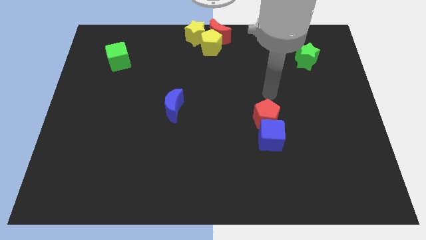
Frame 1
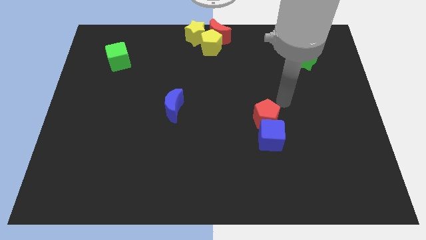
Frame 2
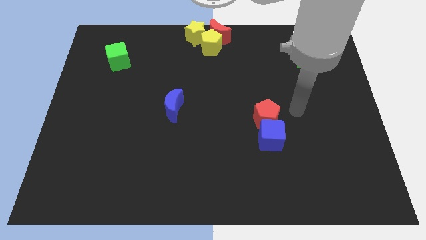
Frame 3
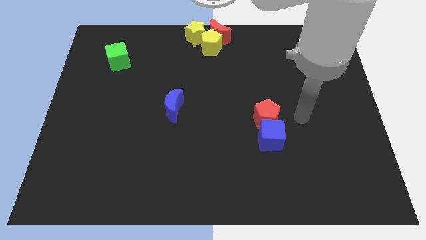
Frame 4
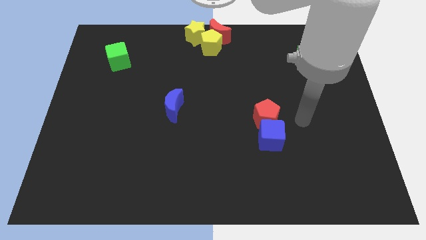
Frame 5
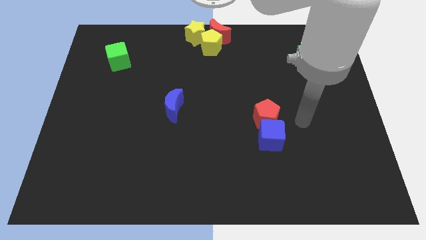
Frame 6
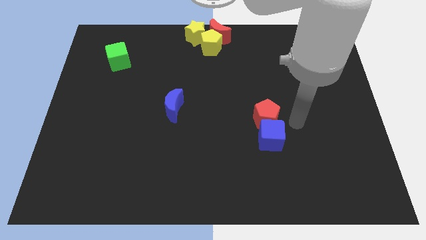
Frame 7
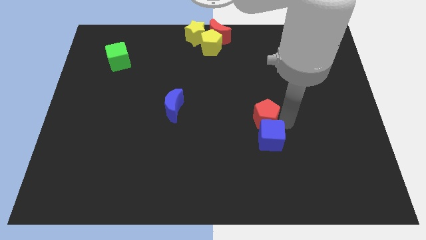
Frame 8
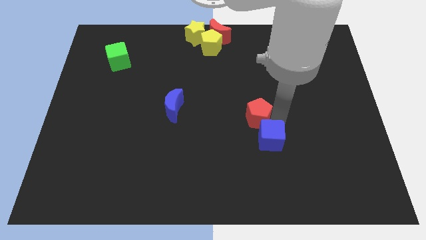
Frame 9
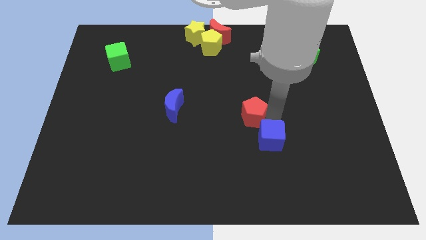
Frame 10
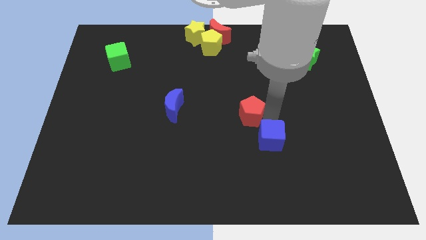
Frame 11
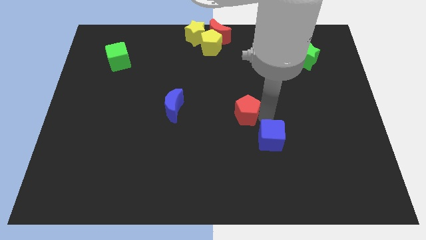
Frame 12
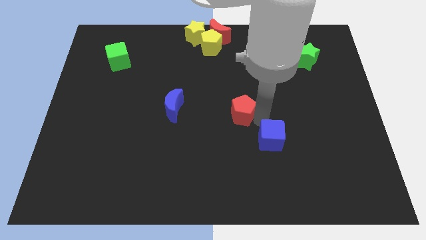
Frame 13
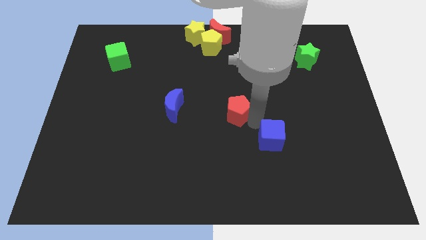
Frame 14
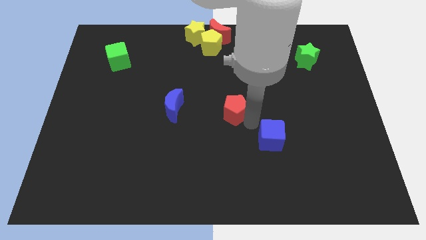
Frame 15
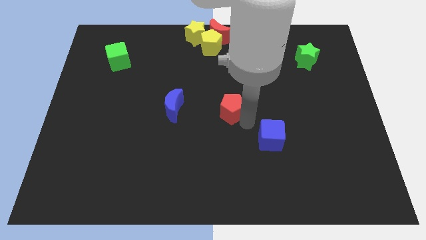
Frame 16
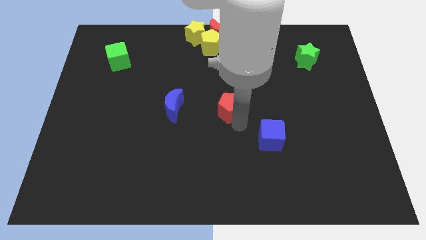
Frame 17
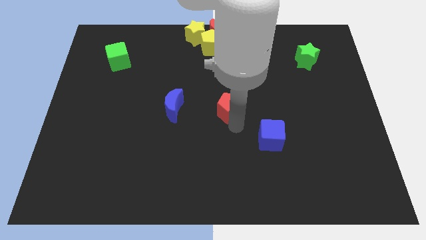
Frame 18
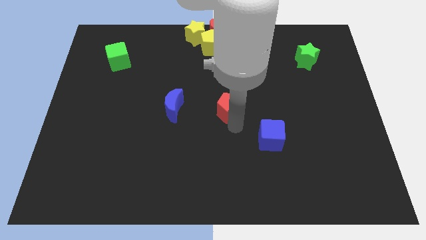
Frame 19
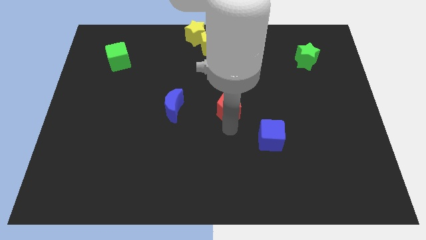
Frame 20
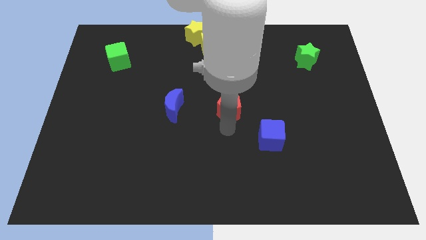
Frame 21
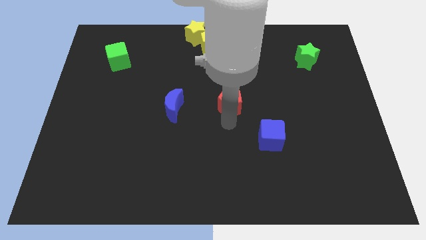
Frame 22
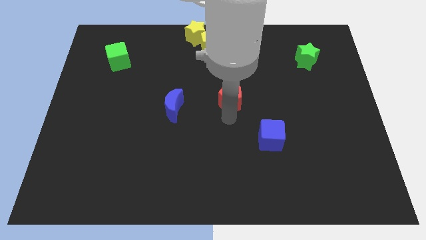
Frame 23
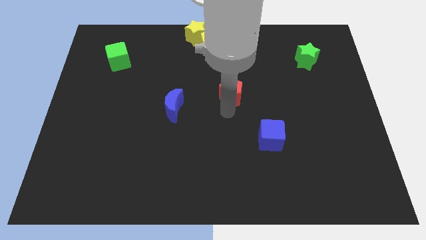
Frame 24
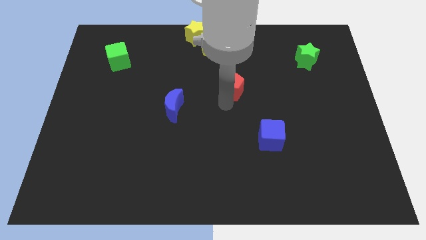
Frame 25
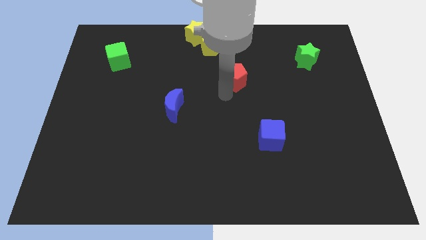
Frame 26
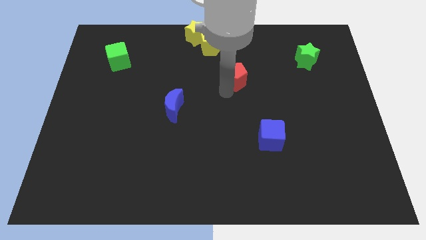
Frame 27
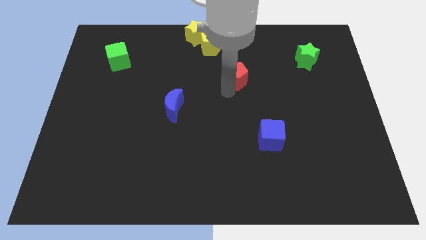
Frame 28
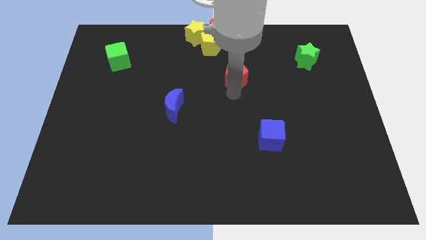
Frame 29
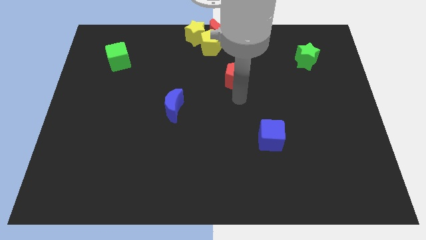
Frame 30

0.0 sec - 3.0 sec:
push the red pentagon towards the blue crescent

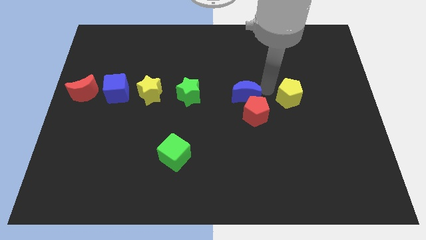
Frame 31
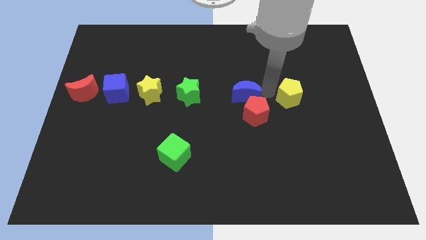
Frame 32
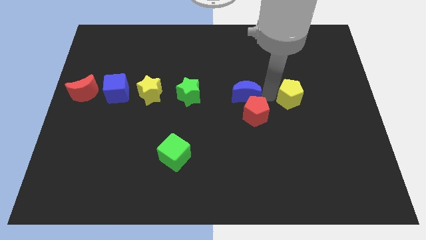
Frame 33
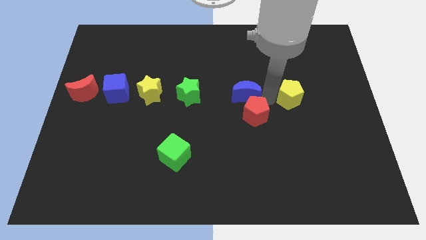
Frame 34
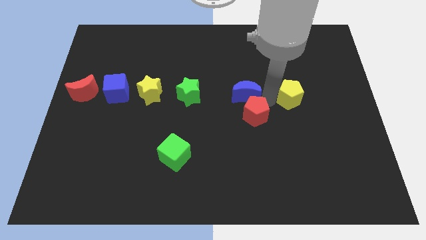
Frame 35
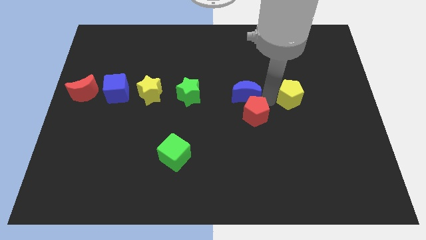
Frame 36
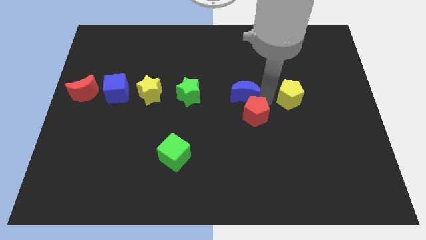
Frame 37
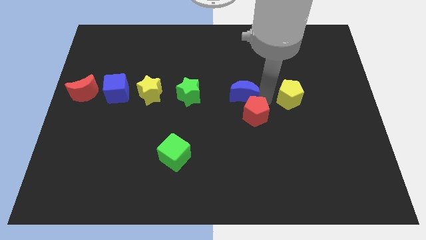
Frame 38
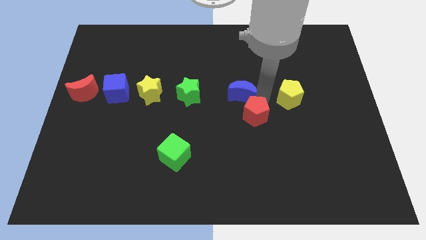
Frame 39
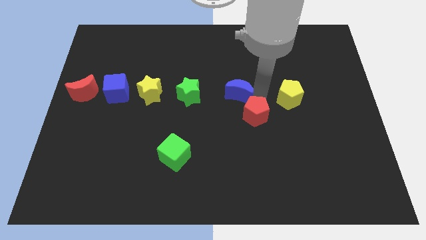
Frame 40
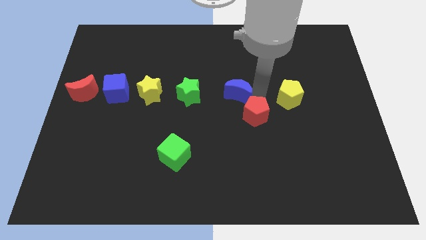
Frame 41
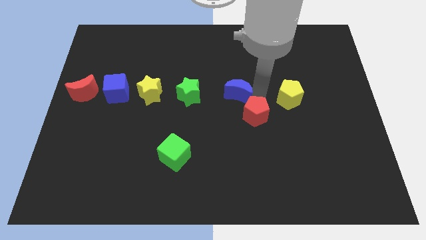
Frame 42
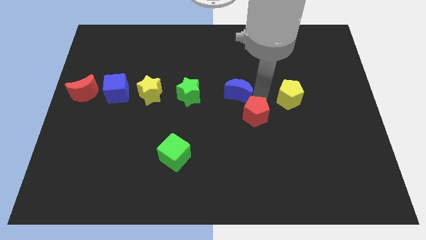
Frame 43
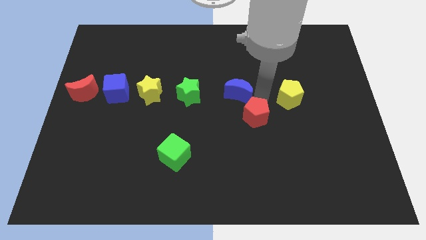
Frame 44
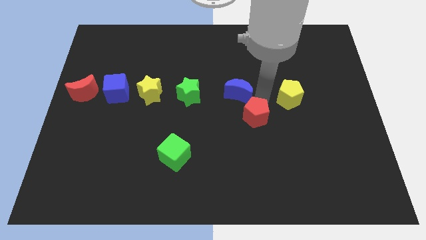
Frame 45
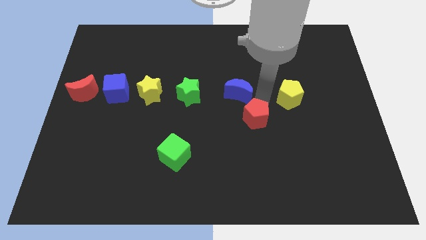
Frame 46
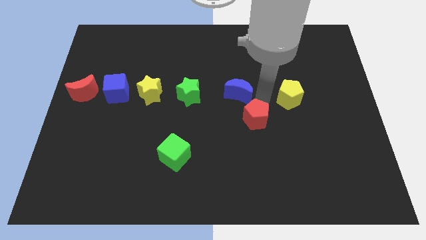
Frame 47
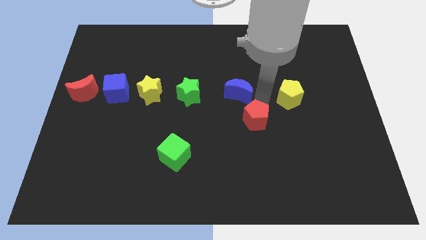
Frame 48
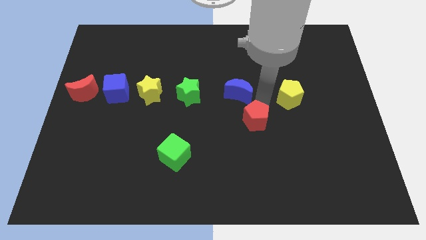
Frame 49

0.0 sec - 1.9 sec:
place the blue crescent parallel to the right side of the green star

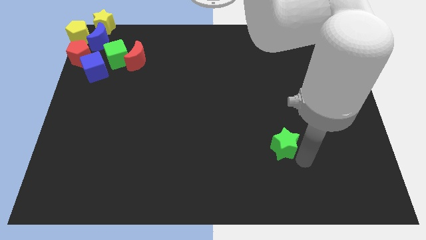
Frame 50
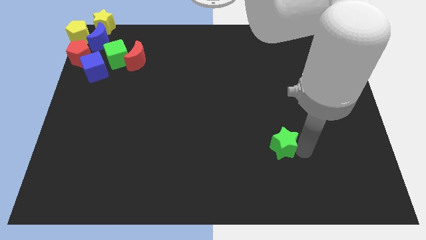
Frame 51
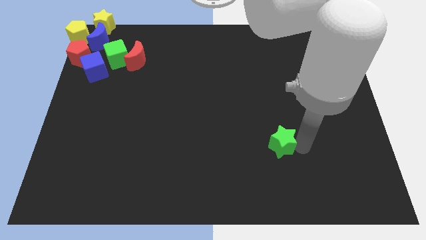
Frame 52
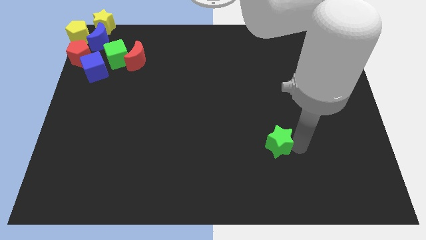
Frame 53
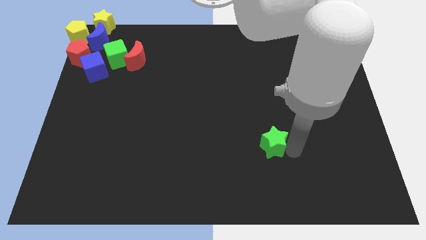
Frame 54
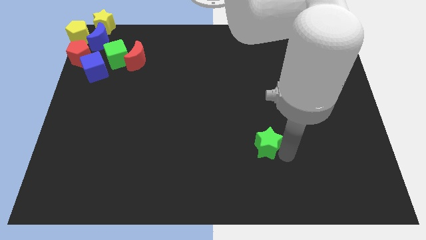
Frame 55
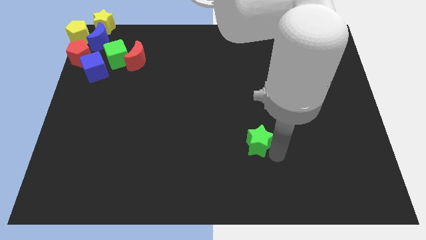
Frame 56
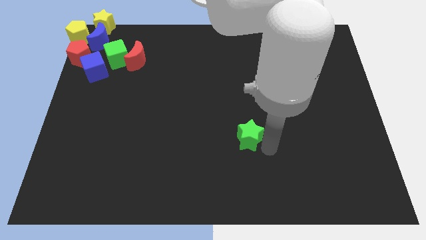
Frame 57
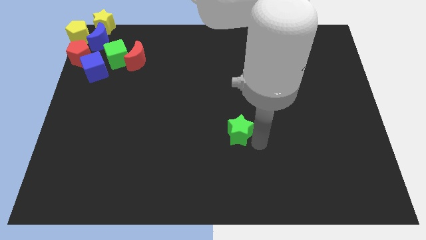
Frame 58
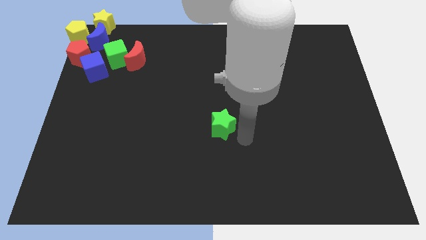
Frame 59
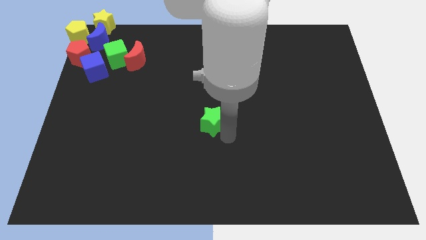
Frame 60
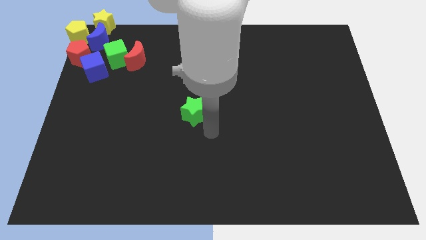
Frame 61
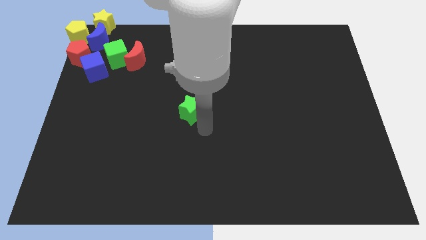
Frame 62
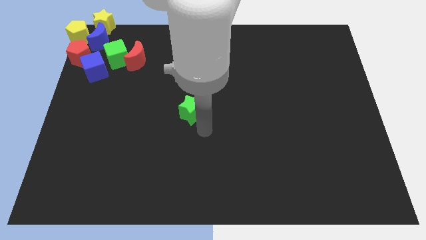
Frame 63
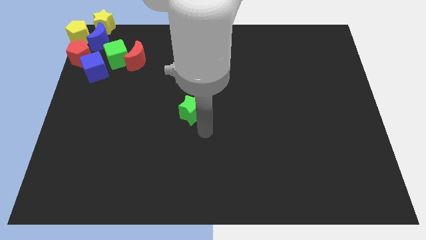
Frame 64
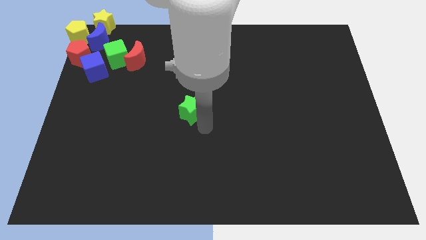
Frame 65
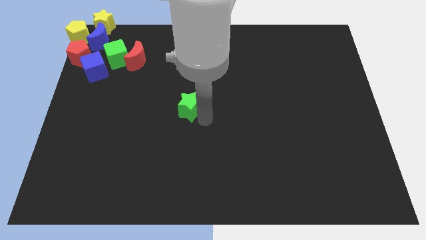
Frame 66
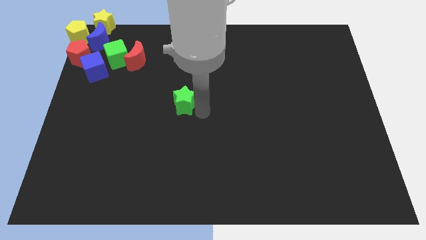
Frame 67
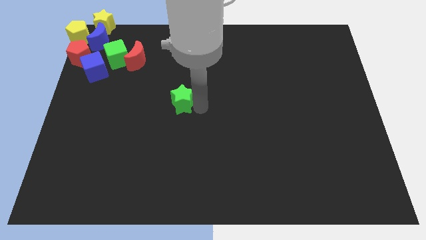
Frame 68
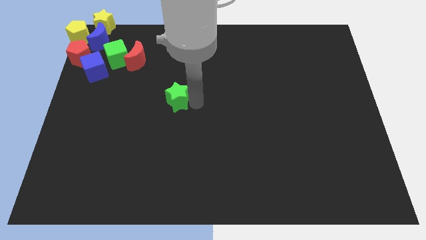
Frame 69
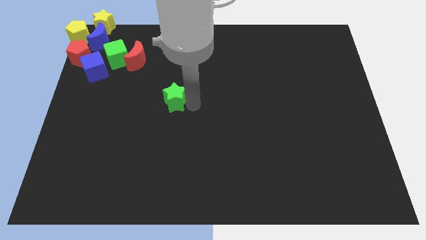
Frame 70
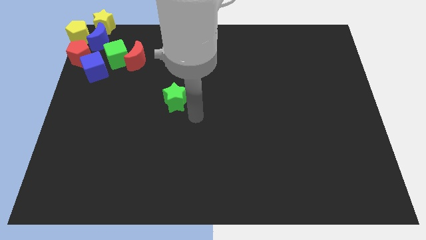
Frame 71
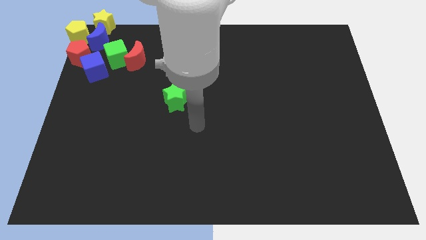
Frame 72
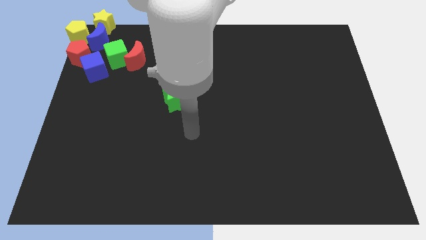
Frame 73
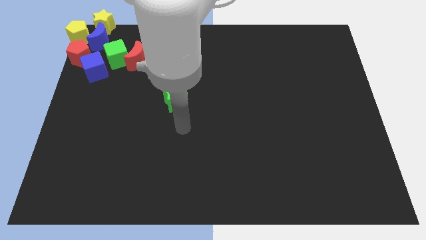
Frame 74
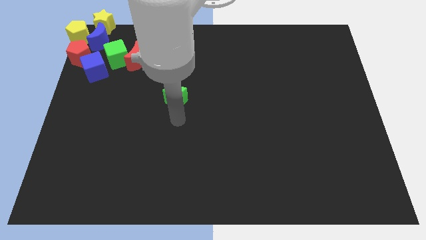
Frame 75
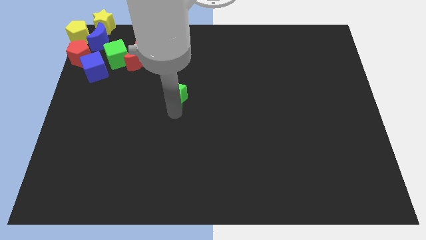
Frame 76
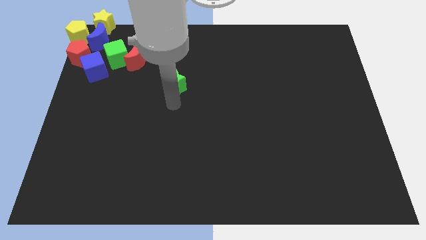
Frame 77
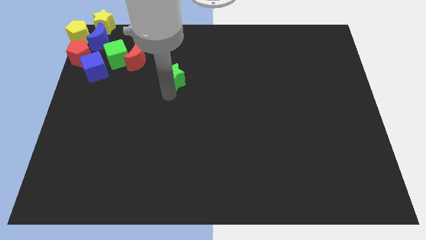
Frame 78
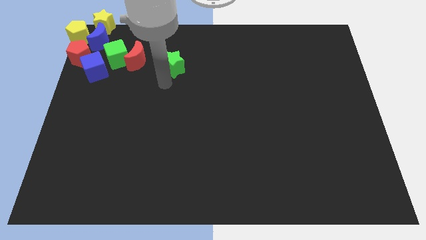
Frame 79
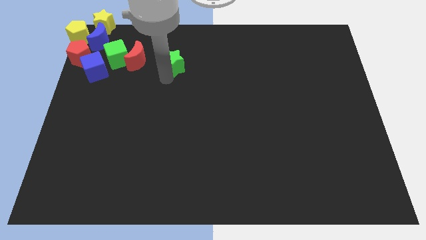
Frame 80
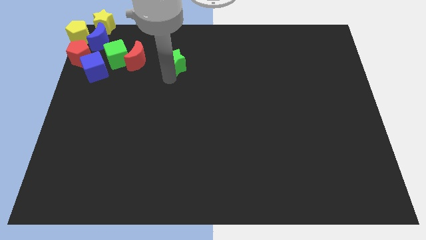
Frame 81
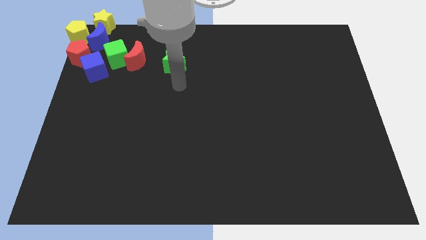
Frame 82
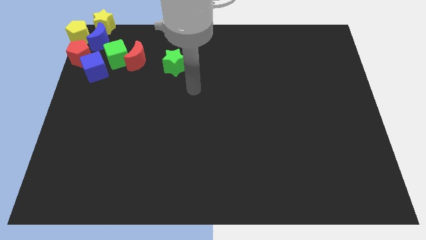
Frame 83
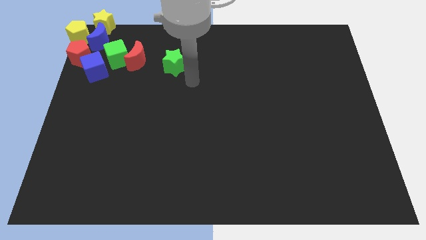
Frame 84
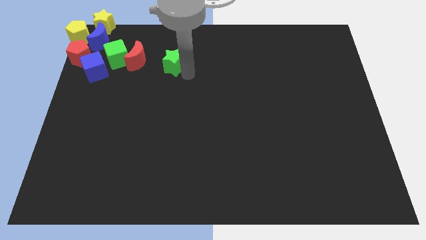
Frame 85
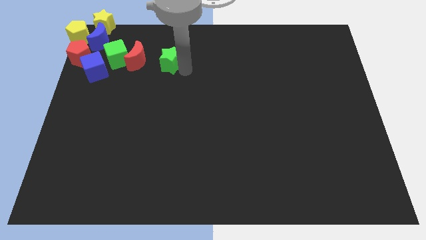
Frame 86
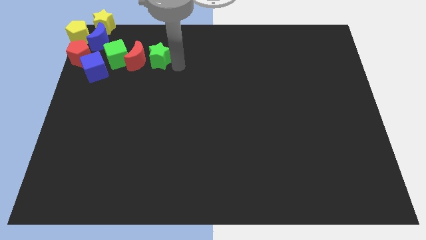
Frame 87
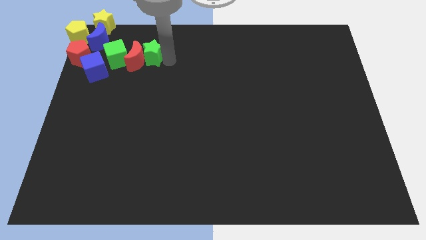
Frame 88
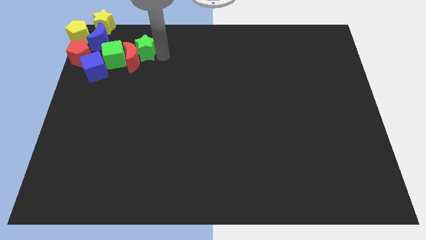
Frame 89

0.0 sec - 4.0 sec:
move the green star to the right of the red crescent

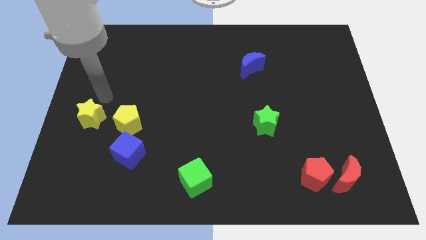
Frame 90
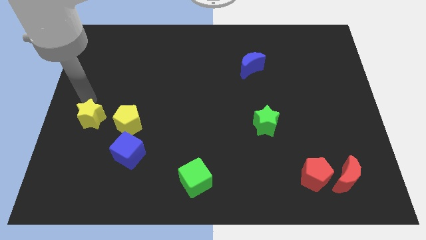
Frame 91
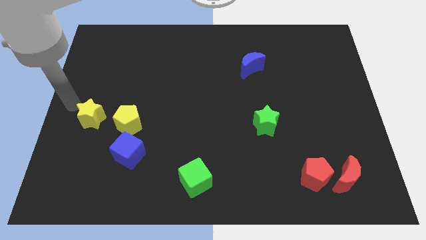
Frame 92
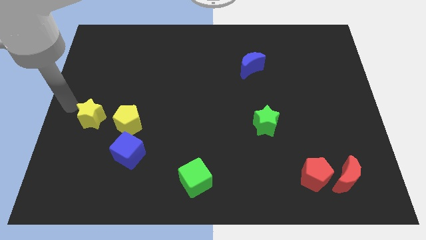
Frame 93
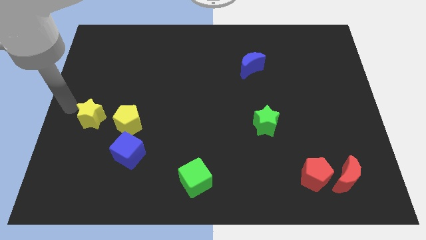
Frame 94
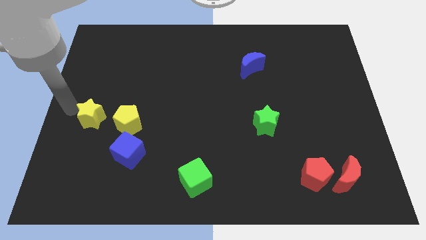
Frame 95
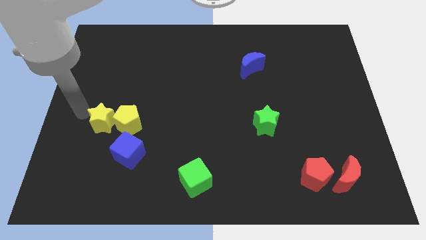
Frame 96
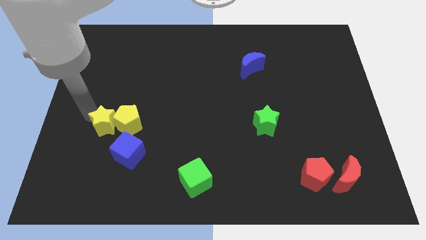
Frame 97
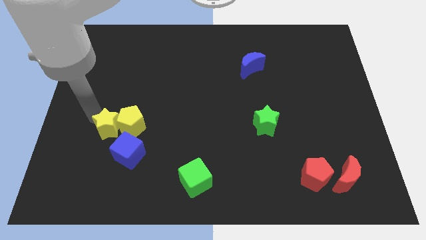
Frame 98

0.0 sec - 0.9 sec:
push the yellow star into yellow pentagon
